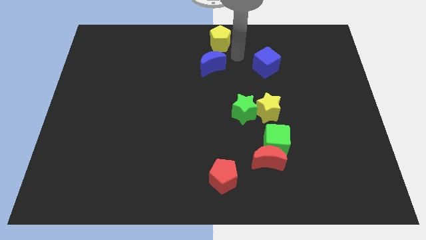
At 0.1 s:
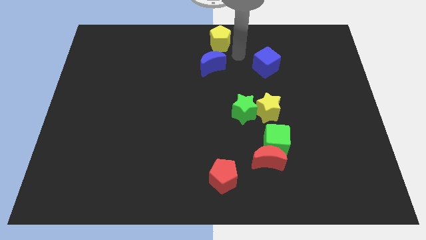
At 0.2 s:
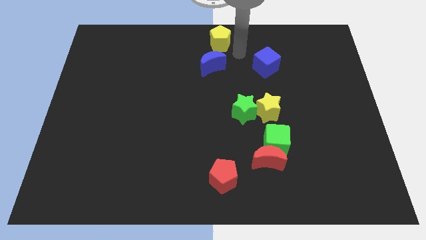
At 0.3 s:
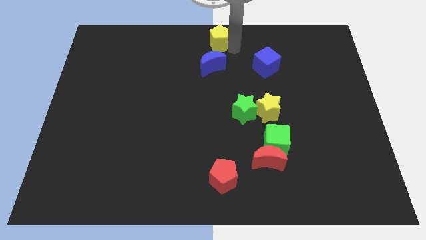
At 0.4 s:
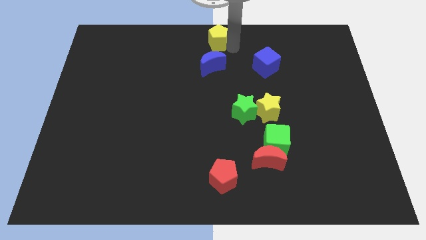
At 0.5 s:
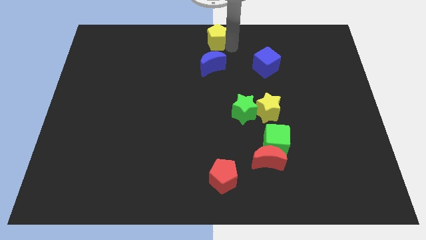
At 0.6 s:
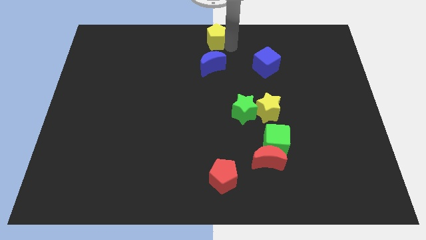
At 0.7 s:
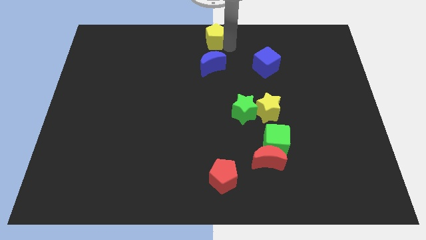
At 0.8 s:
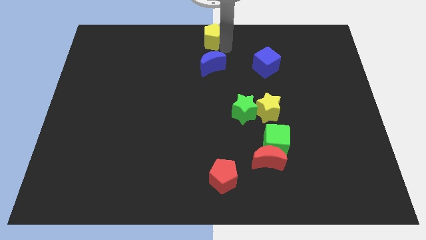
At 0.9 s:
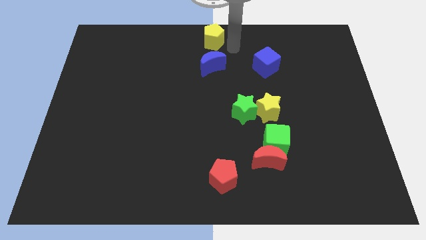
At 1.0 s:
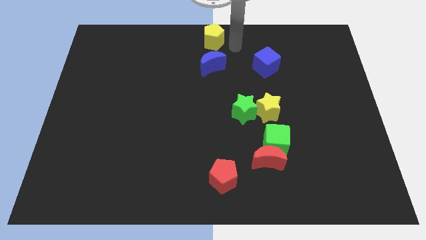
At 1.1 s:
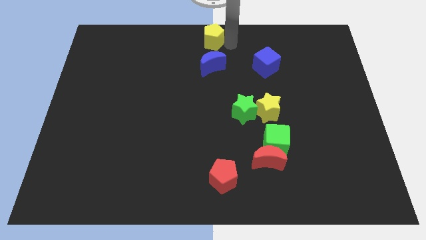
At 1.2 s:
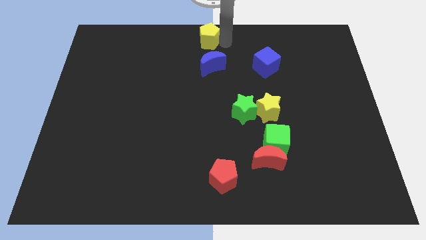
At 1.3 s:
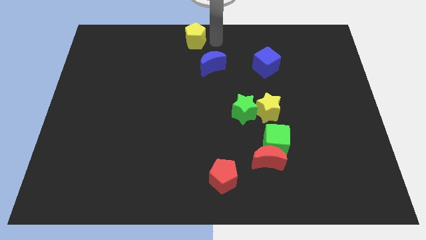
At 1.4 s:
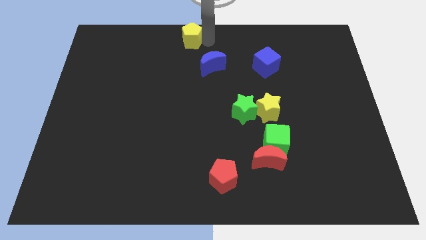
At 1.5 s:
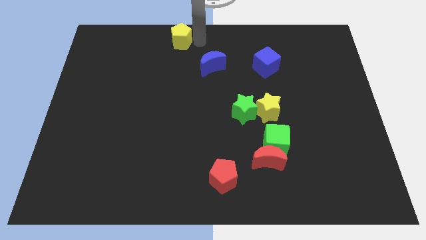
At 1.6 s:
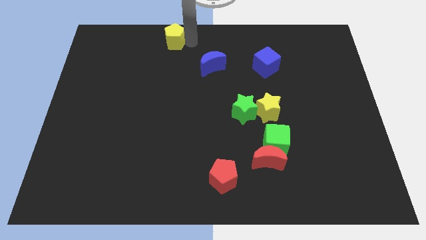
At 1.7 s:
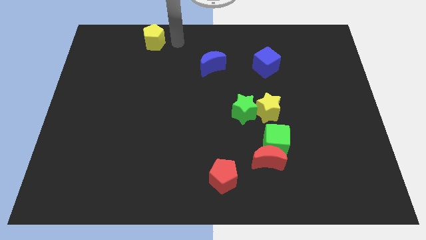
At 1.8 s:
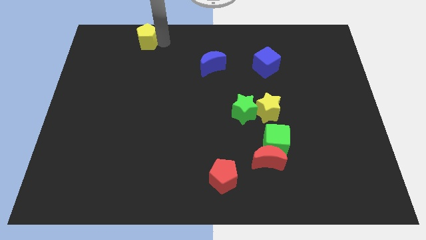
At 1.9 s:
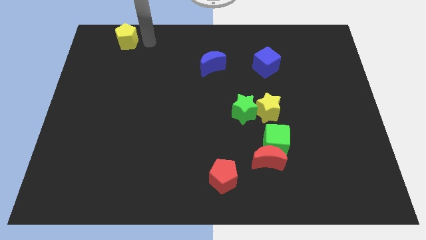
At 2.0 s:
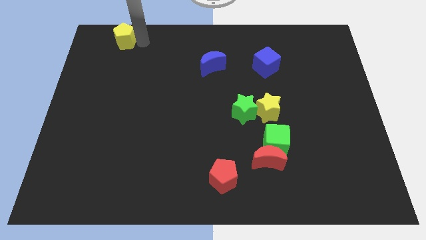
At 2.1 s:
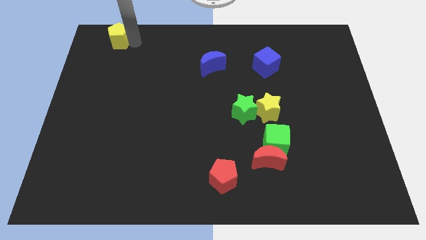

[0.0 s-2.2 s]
move the yellow pentagon towards left

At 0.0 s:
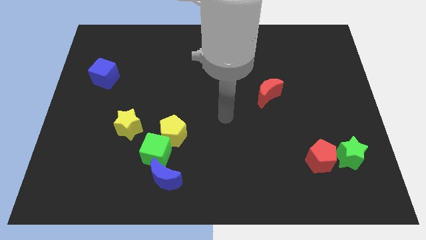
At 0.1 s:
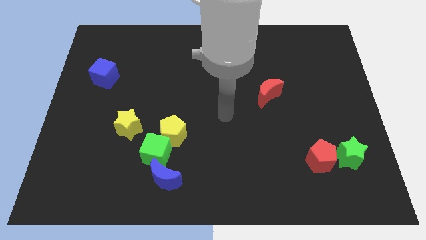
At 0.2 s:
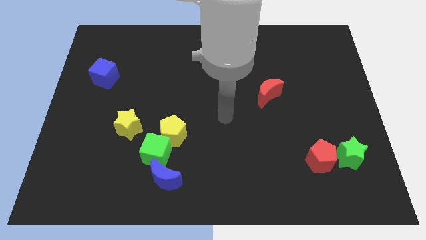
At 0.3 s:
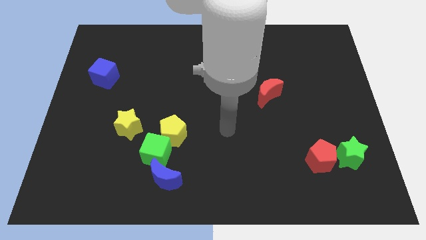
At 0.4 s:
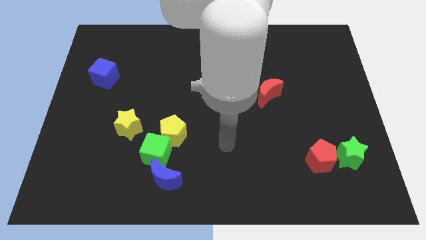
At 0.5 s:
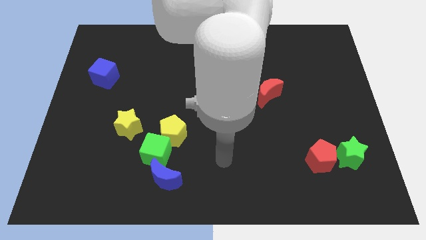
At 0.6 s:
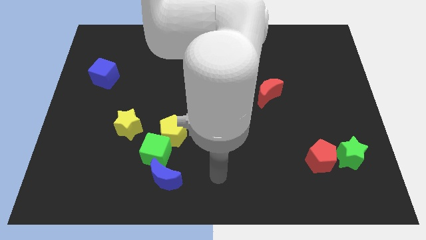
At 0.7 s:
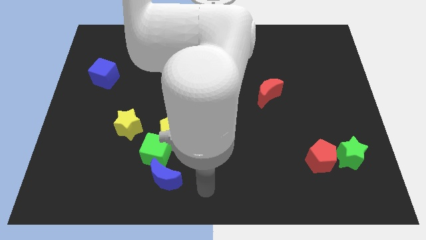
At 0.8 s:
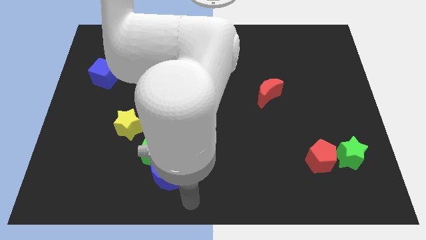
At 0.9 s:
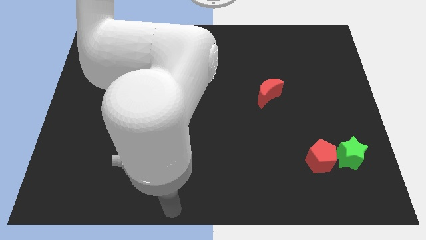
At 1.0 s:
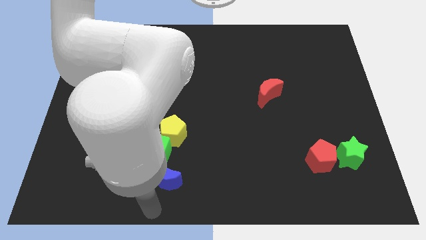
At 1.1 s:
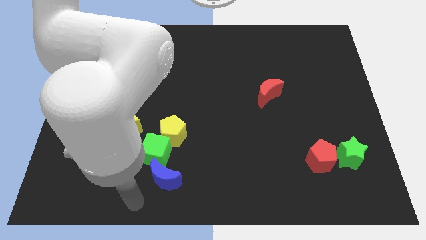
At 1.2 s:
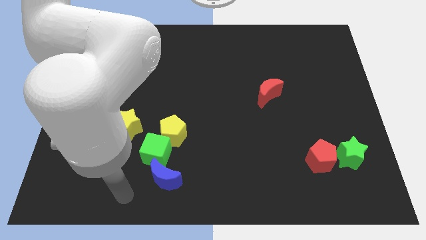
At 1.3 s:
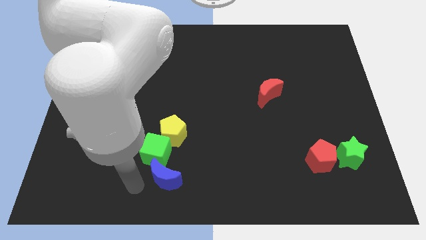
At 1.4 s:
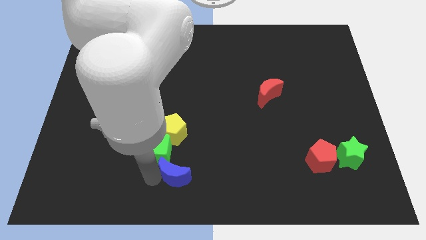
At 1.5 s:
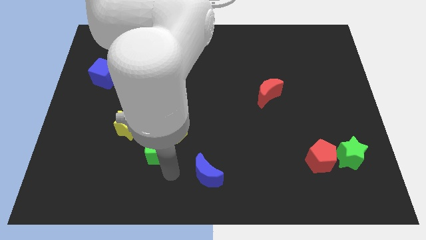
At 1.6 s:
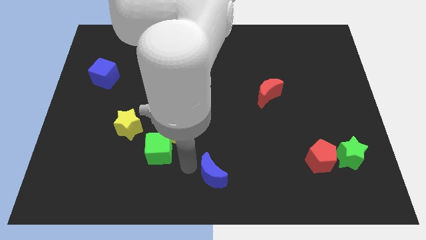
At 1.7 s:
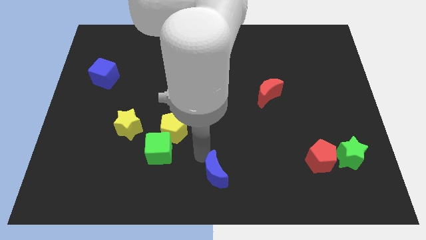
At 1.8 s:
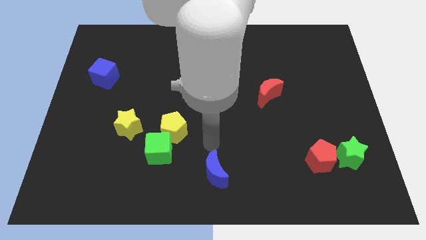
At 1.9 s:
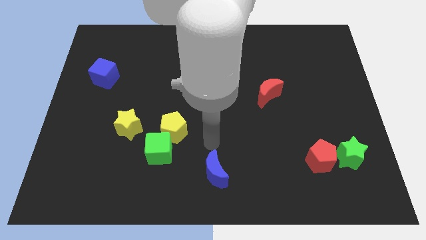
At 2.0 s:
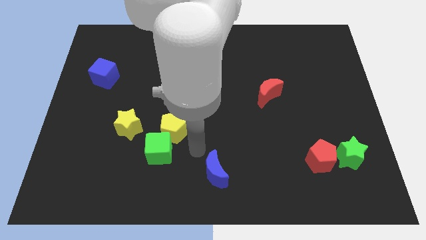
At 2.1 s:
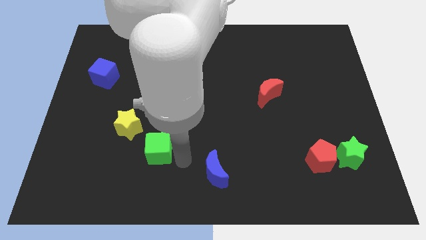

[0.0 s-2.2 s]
move the arm towards the blue moon

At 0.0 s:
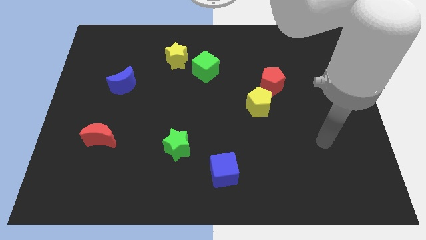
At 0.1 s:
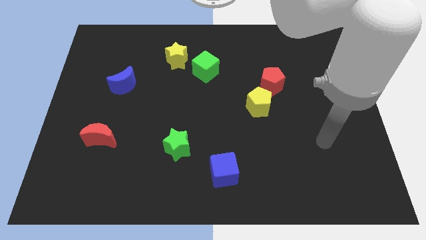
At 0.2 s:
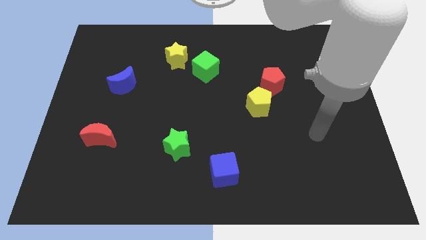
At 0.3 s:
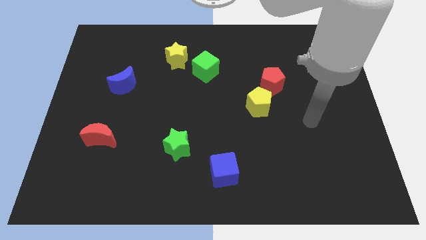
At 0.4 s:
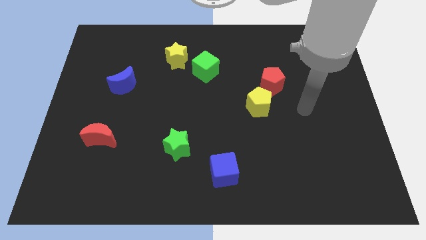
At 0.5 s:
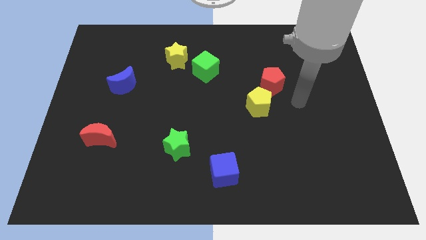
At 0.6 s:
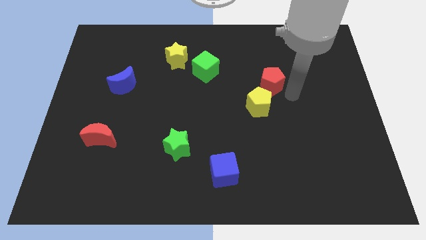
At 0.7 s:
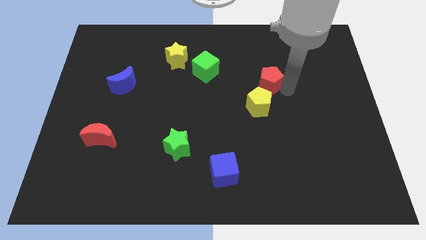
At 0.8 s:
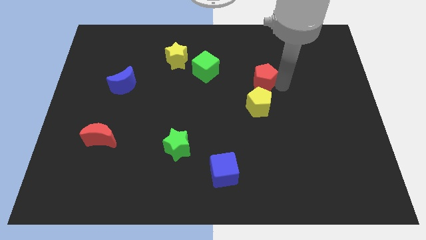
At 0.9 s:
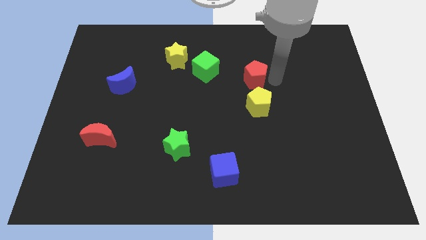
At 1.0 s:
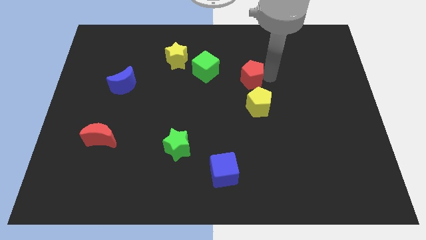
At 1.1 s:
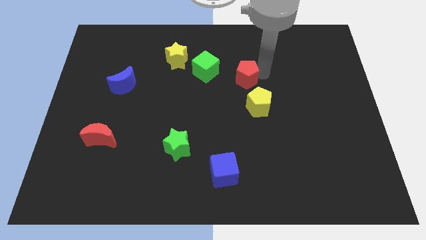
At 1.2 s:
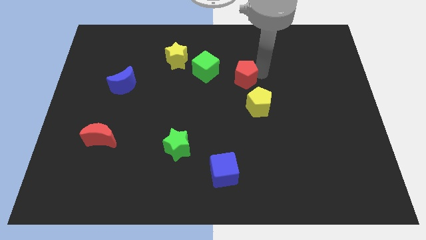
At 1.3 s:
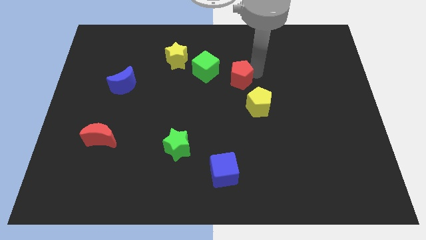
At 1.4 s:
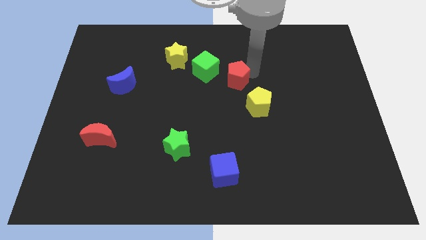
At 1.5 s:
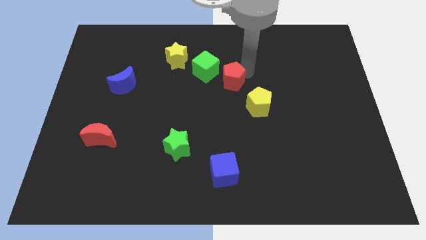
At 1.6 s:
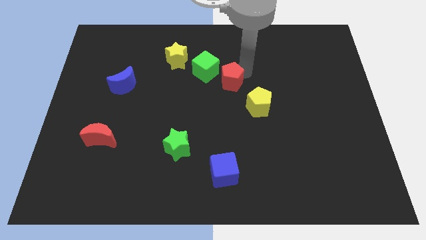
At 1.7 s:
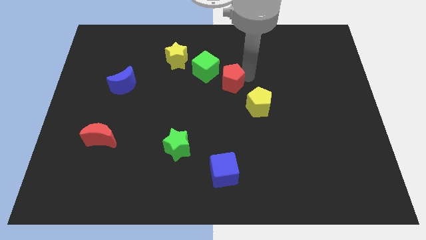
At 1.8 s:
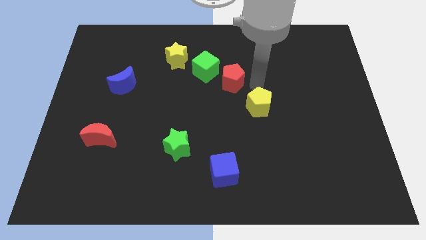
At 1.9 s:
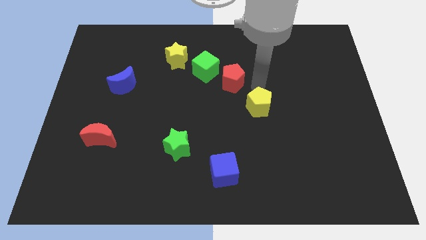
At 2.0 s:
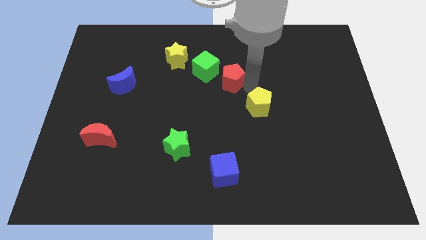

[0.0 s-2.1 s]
move the red crescent diagonally to the green cube

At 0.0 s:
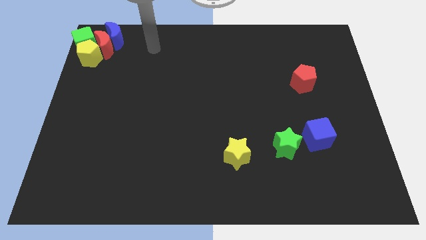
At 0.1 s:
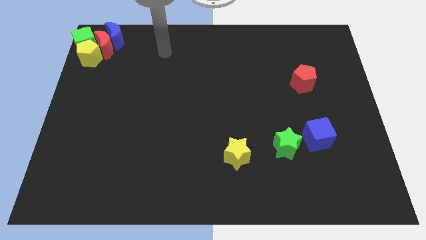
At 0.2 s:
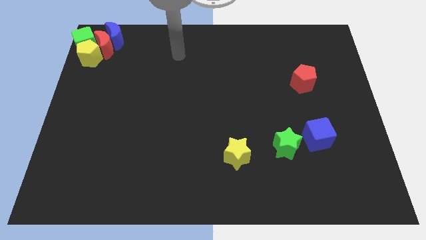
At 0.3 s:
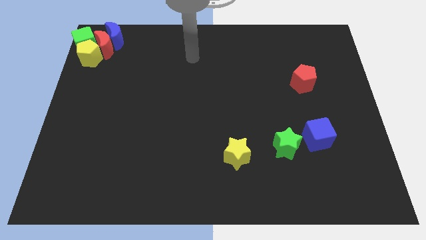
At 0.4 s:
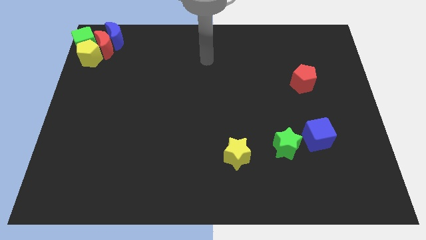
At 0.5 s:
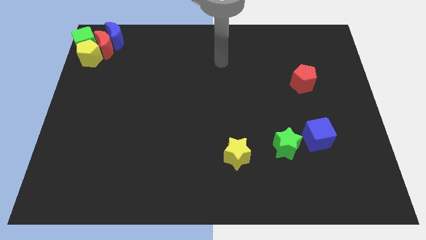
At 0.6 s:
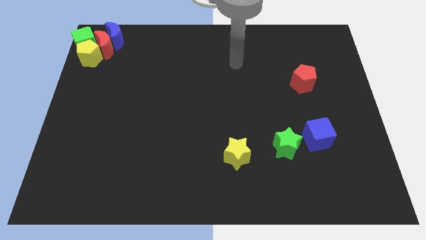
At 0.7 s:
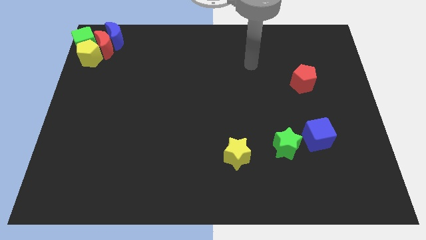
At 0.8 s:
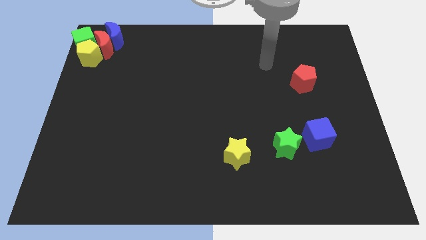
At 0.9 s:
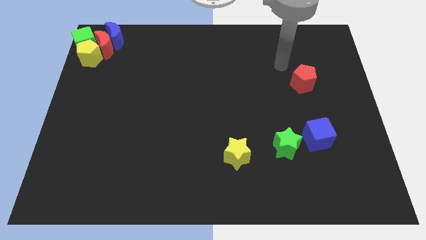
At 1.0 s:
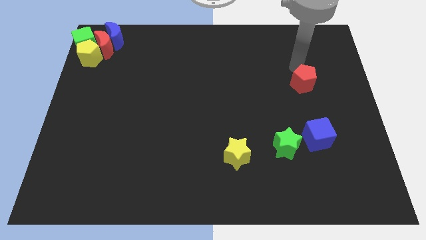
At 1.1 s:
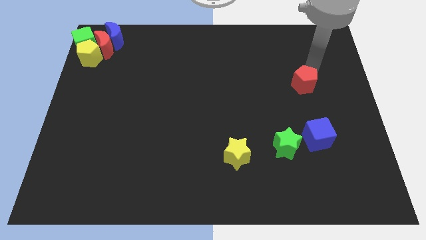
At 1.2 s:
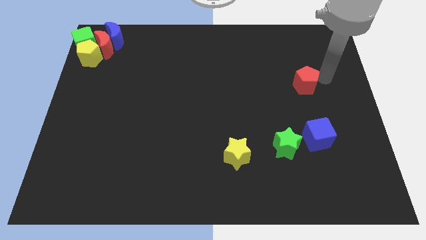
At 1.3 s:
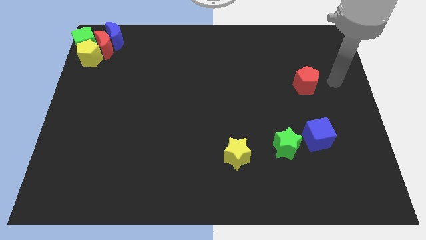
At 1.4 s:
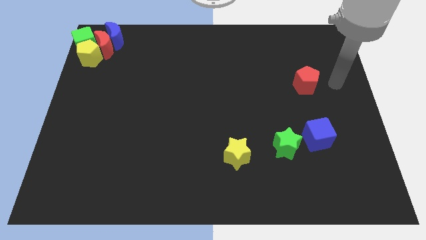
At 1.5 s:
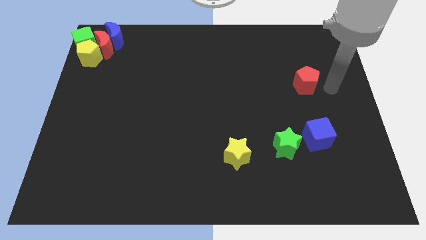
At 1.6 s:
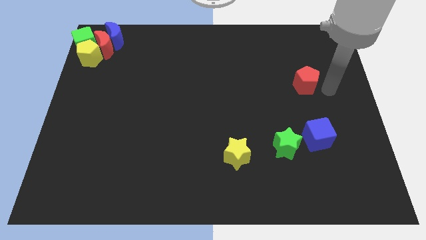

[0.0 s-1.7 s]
point your arm to the right side of the red pentagon

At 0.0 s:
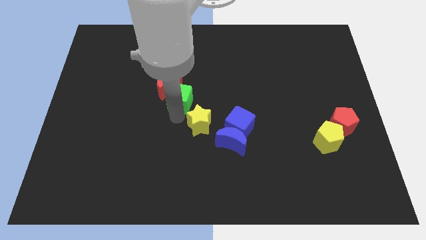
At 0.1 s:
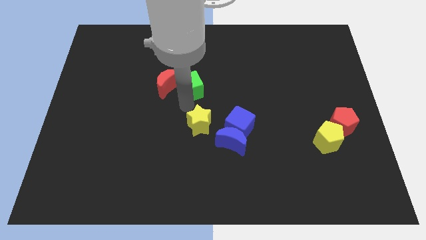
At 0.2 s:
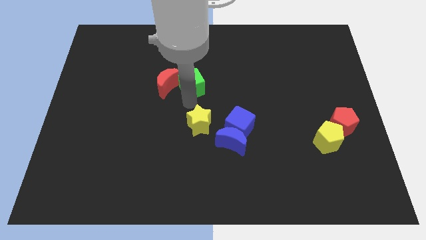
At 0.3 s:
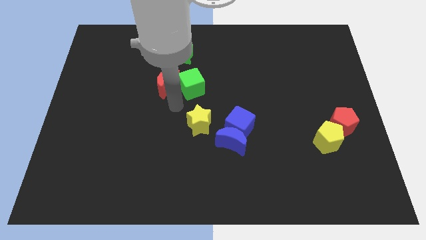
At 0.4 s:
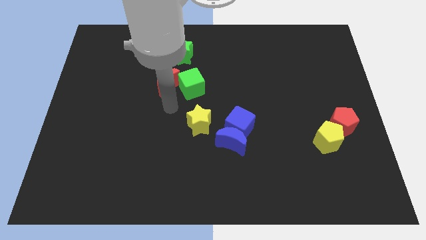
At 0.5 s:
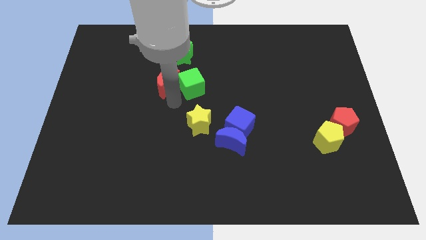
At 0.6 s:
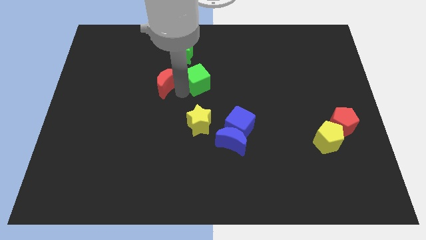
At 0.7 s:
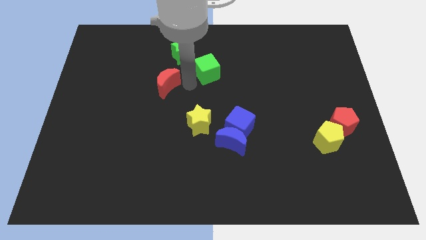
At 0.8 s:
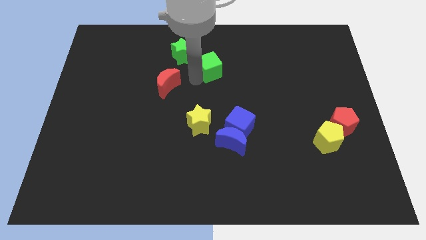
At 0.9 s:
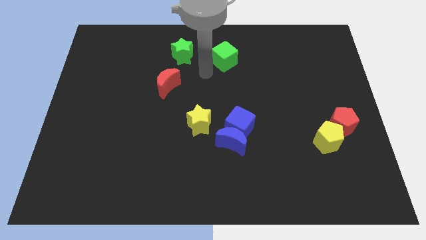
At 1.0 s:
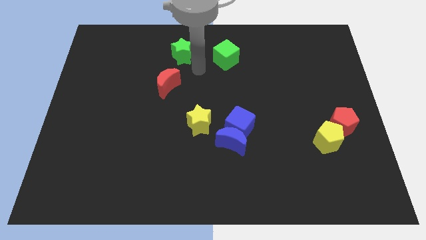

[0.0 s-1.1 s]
push the green cube to the right of the green star
